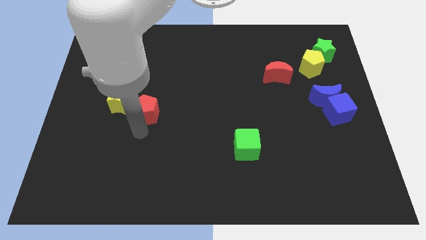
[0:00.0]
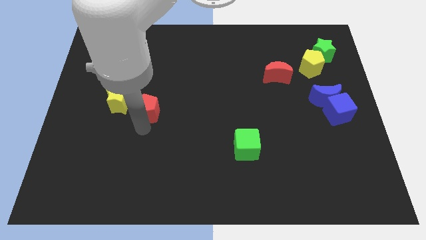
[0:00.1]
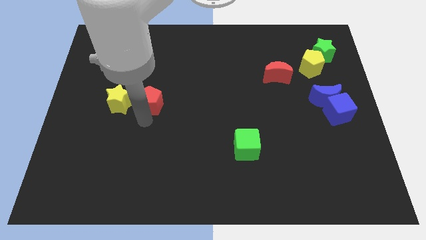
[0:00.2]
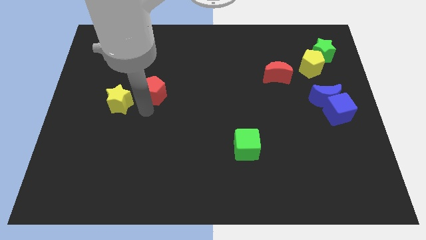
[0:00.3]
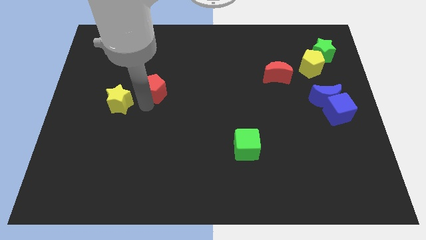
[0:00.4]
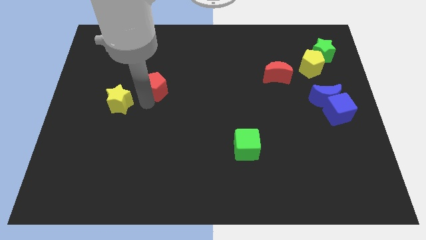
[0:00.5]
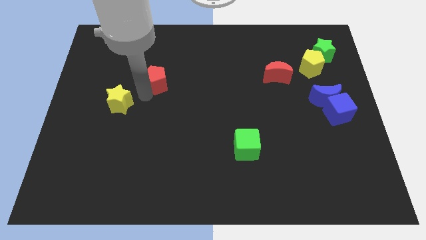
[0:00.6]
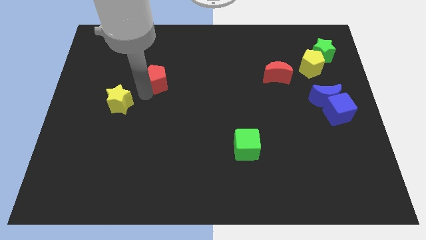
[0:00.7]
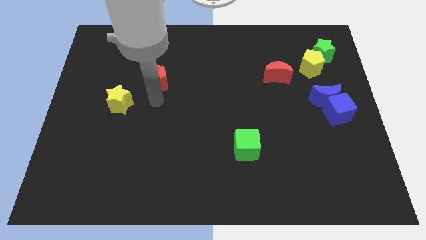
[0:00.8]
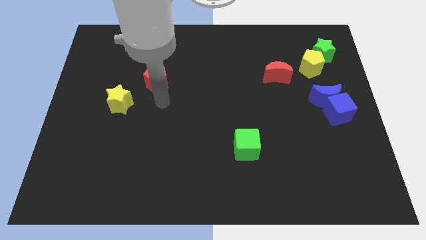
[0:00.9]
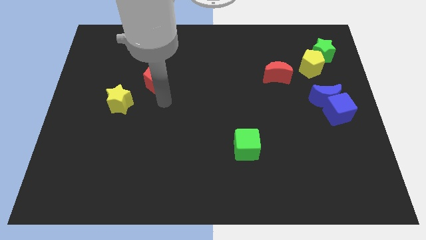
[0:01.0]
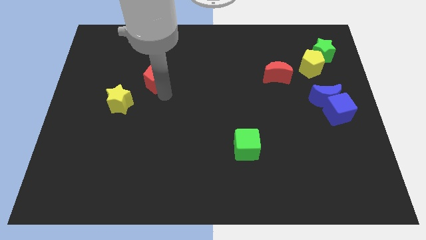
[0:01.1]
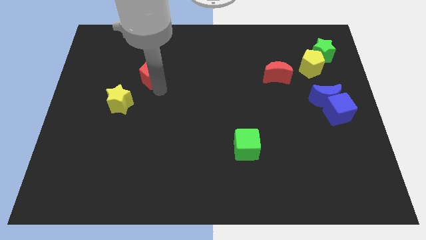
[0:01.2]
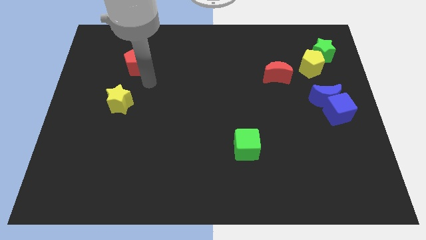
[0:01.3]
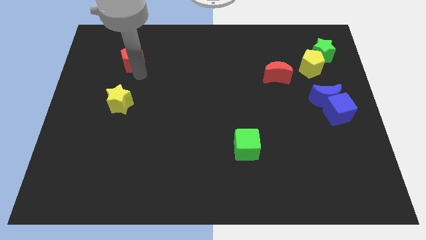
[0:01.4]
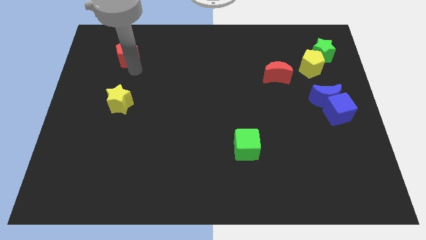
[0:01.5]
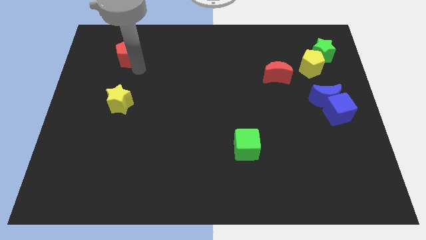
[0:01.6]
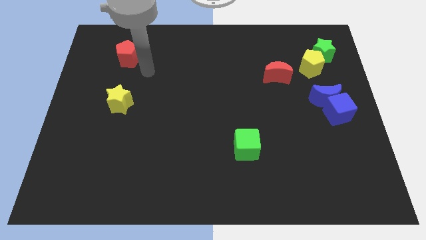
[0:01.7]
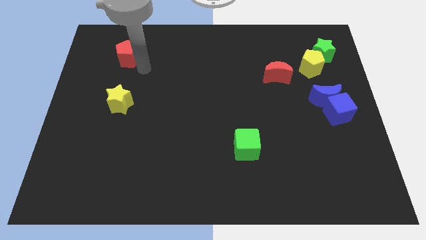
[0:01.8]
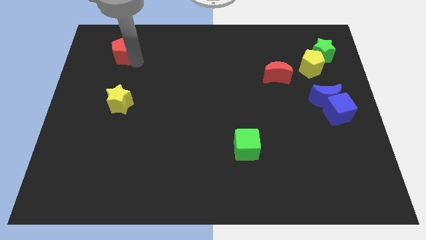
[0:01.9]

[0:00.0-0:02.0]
place red pentagon above the yellow star

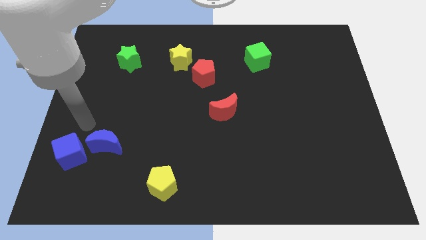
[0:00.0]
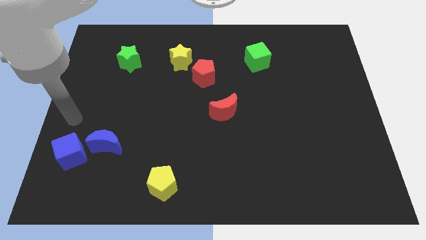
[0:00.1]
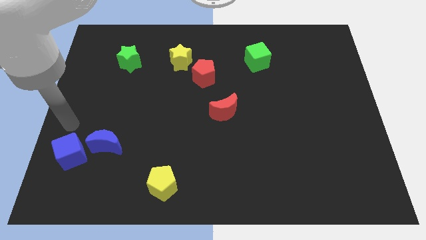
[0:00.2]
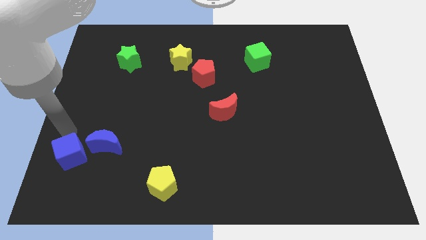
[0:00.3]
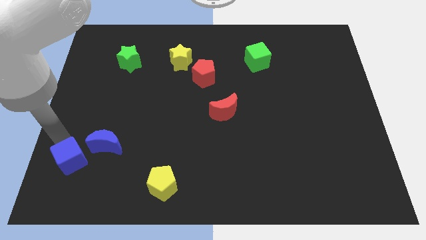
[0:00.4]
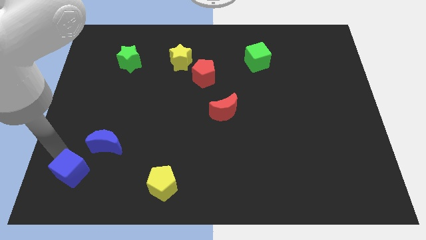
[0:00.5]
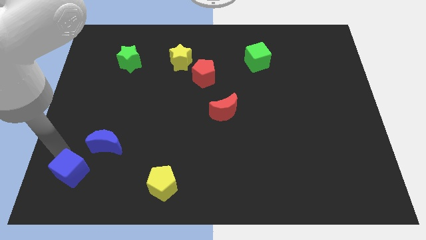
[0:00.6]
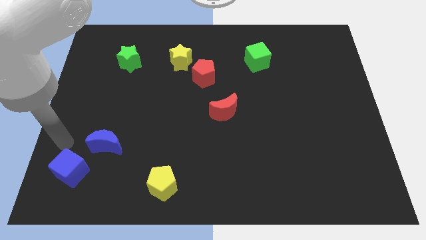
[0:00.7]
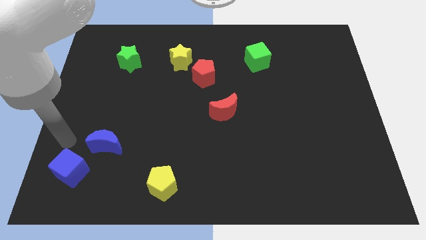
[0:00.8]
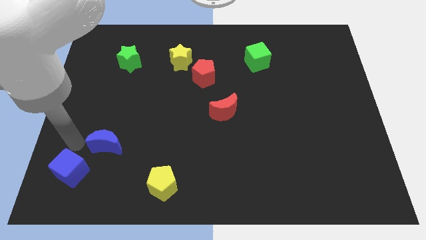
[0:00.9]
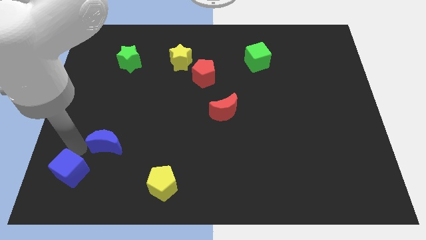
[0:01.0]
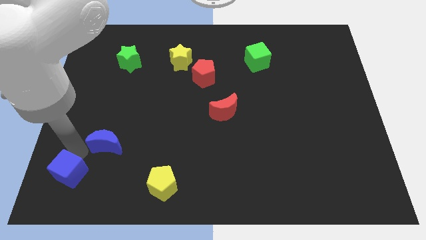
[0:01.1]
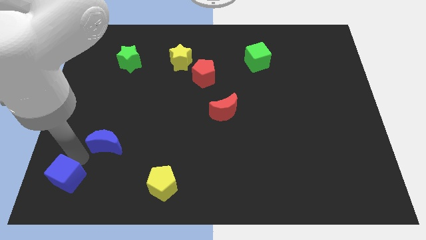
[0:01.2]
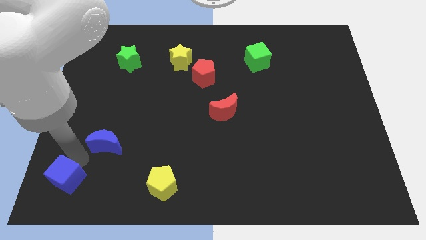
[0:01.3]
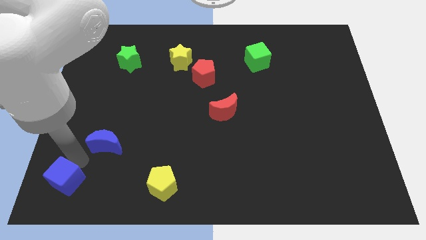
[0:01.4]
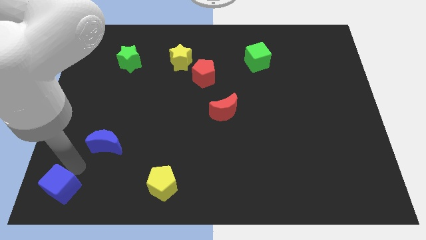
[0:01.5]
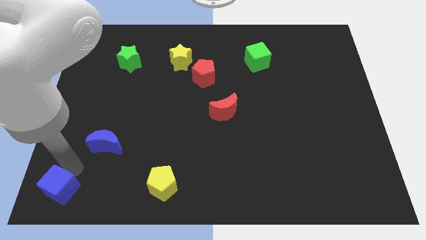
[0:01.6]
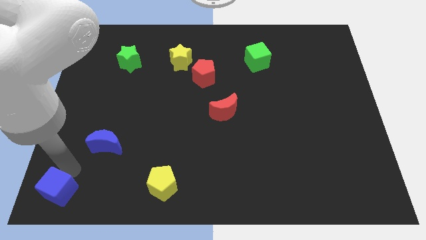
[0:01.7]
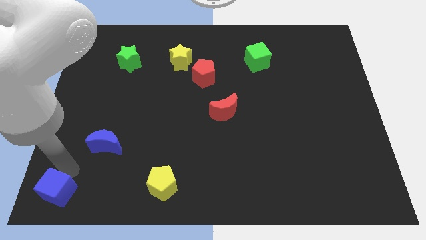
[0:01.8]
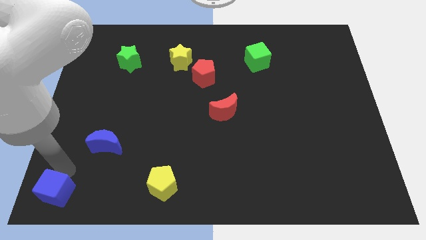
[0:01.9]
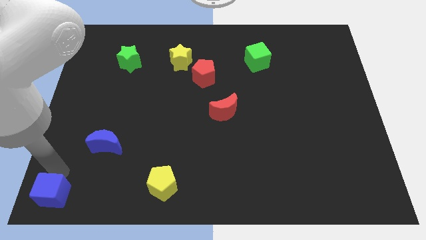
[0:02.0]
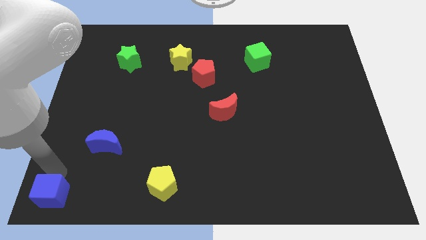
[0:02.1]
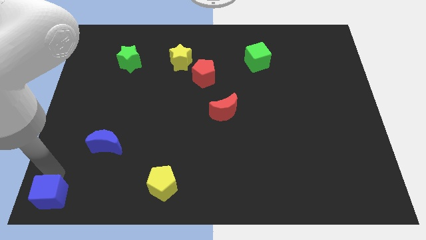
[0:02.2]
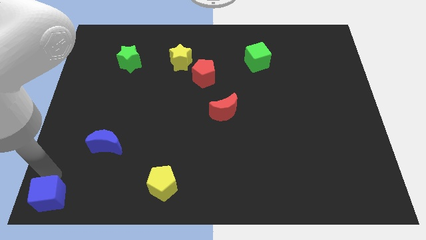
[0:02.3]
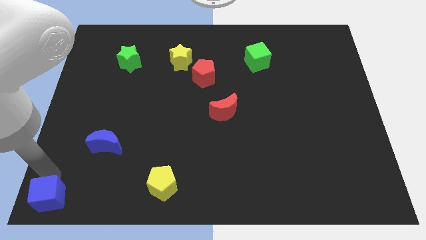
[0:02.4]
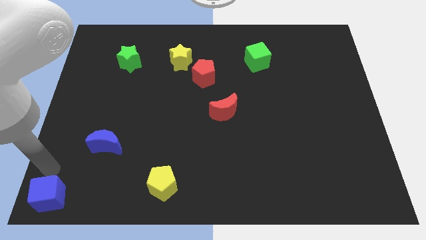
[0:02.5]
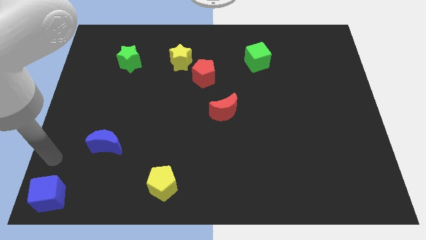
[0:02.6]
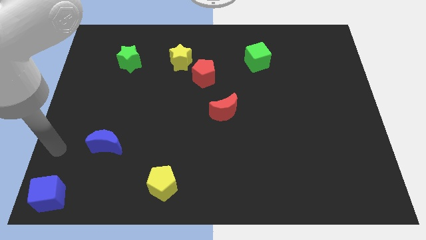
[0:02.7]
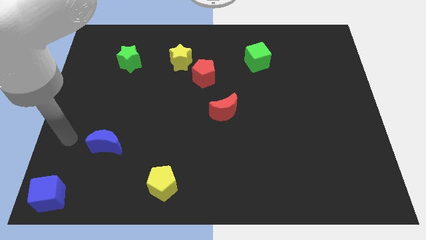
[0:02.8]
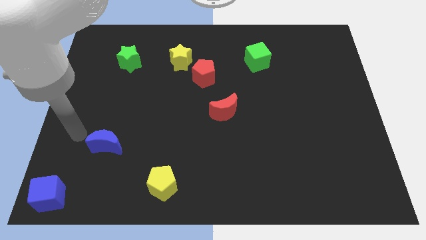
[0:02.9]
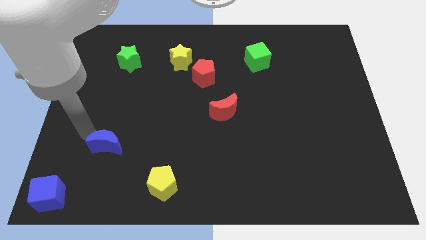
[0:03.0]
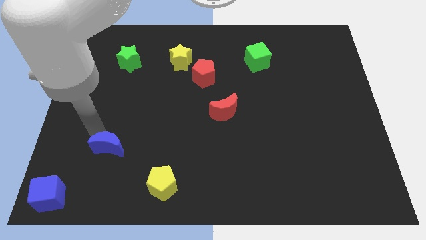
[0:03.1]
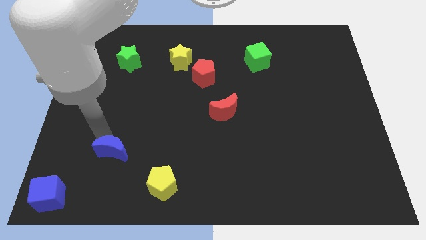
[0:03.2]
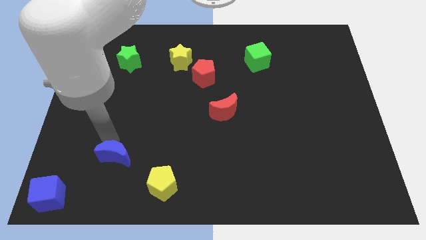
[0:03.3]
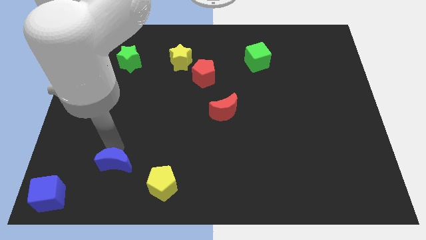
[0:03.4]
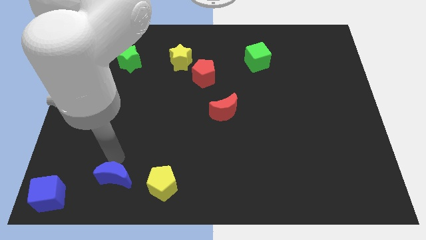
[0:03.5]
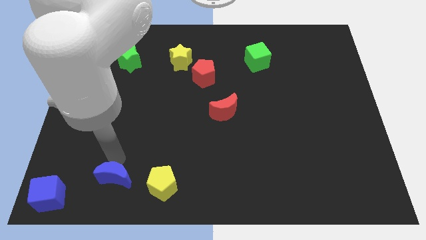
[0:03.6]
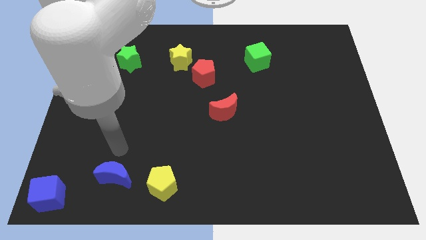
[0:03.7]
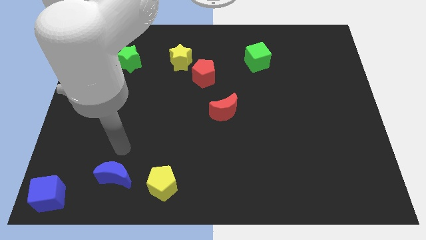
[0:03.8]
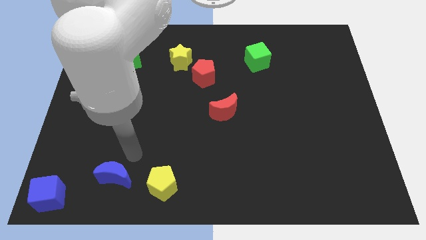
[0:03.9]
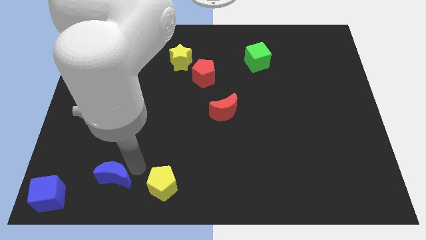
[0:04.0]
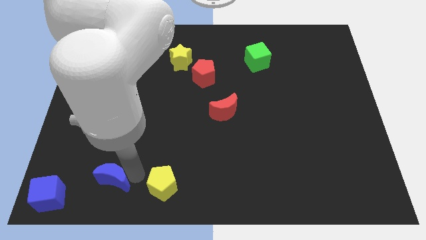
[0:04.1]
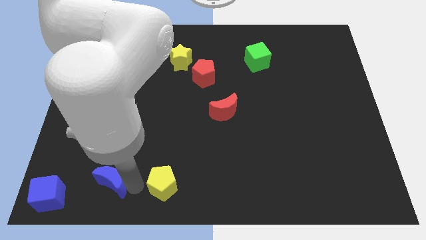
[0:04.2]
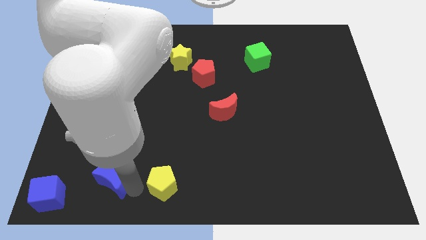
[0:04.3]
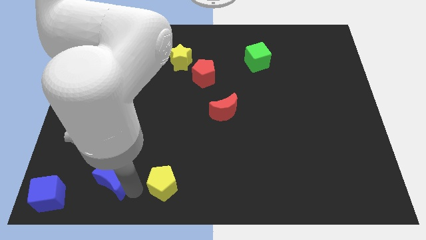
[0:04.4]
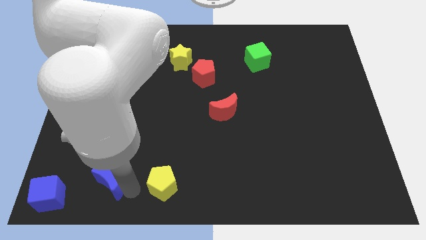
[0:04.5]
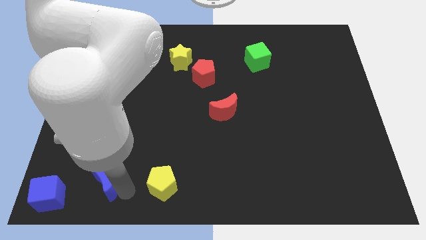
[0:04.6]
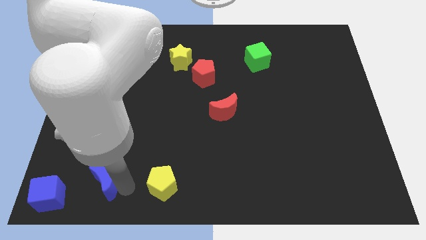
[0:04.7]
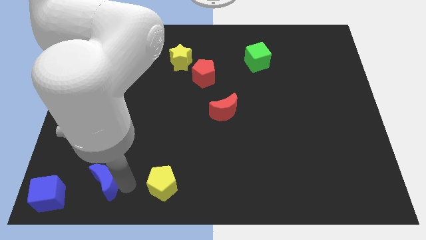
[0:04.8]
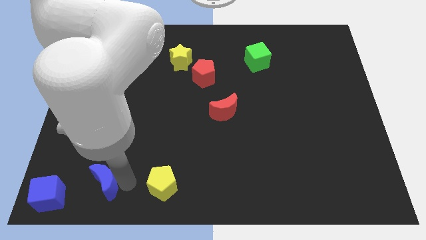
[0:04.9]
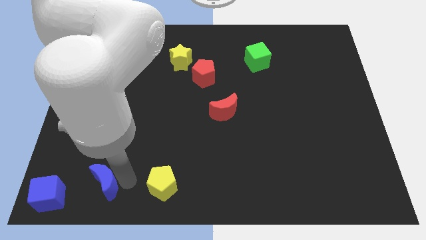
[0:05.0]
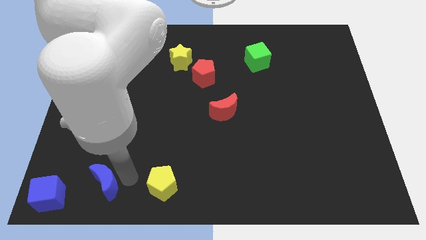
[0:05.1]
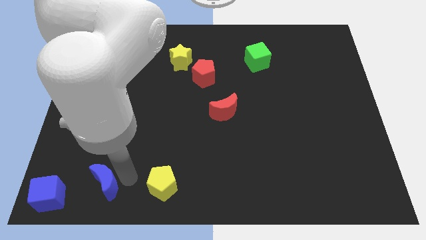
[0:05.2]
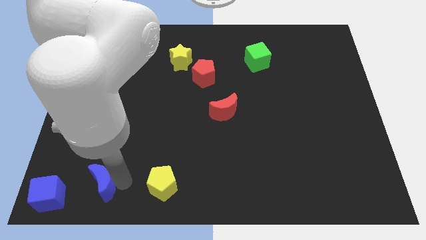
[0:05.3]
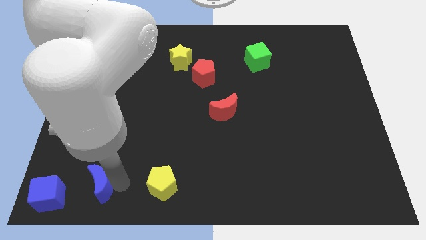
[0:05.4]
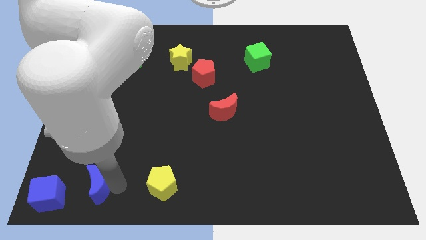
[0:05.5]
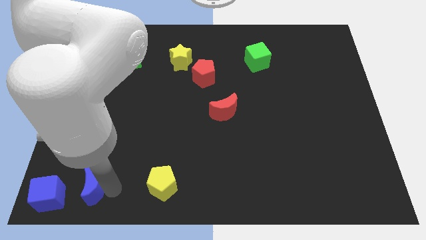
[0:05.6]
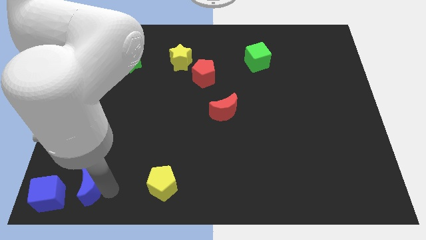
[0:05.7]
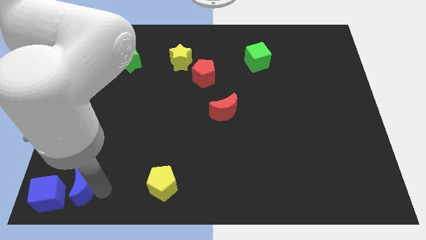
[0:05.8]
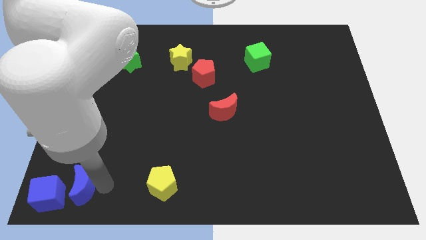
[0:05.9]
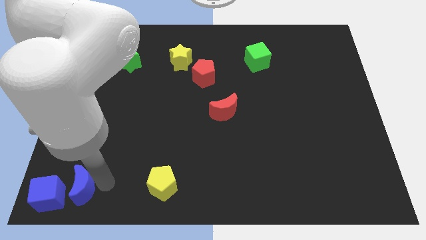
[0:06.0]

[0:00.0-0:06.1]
place the blue blocks to the left side of the yellow pentagon

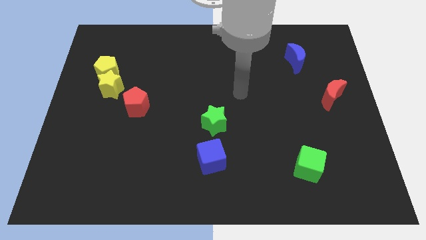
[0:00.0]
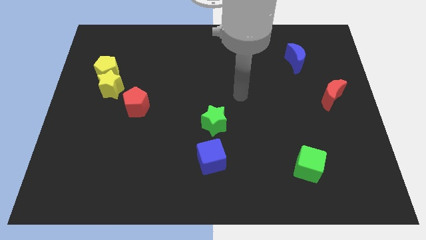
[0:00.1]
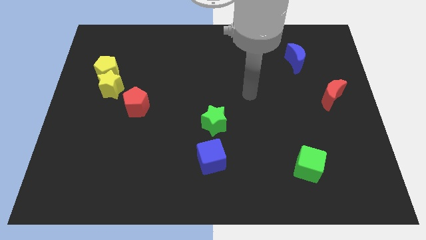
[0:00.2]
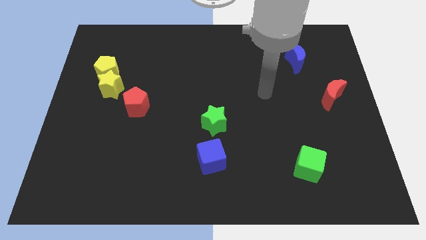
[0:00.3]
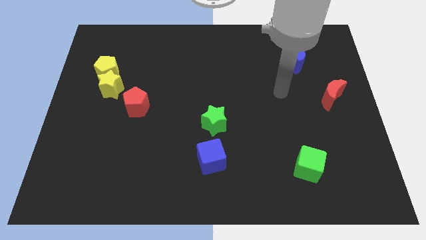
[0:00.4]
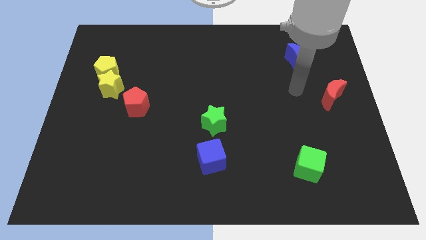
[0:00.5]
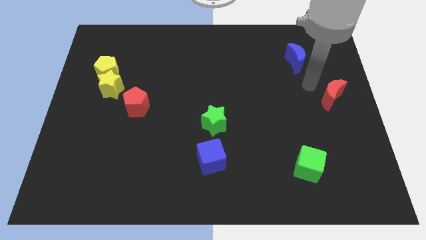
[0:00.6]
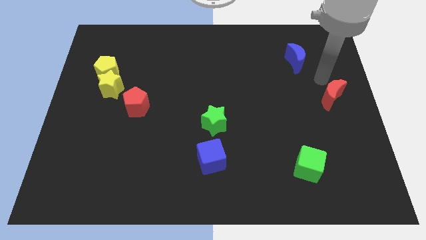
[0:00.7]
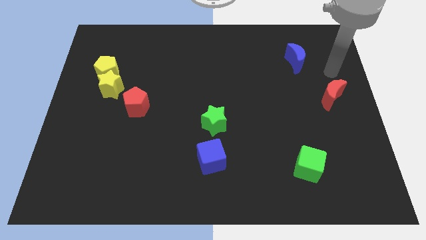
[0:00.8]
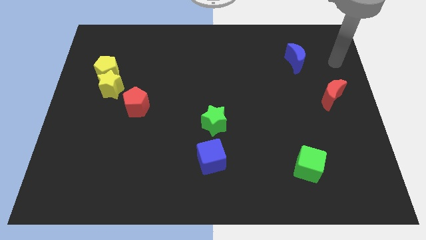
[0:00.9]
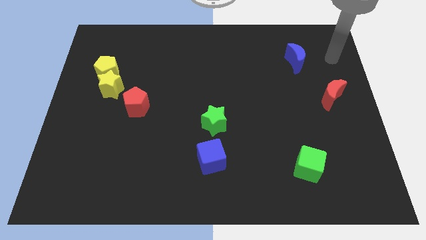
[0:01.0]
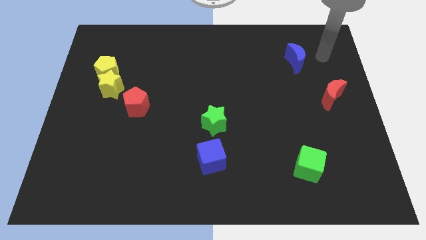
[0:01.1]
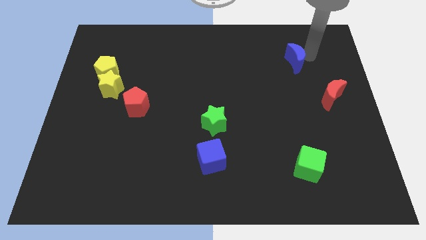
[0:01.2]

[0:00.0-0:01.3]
point your arm to the right side of blue moon
